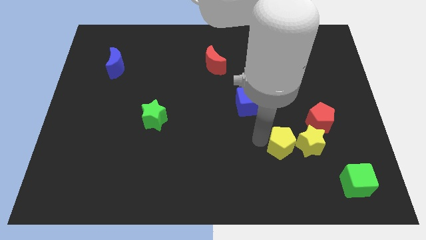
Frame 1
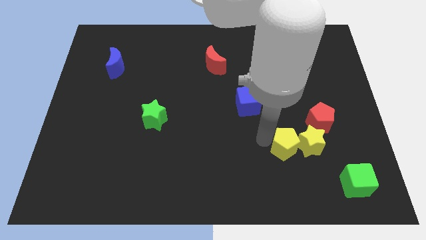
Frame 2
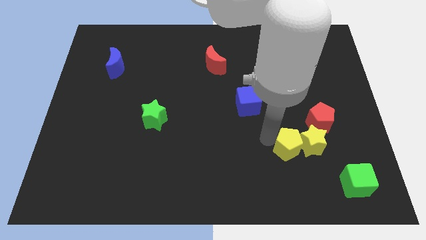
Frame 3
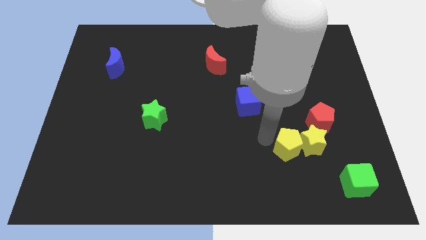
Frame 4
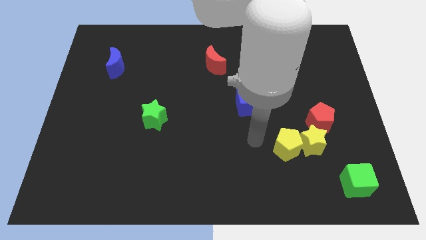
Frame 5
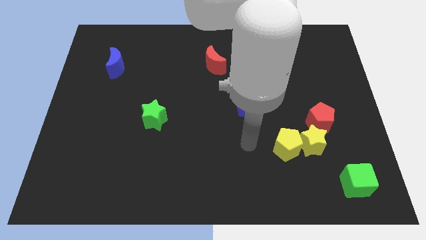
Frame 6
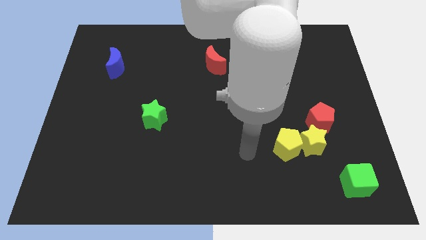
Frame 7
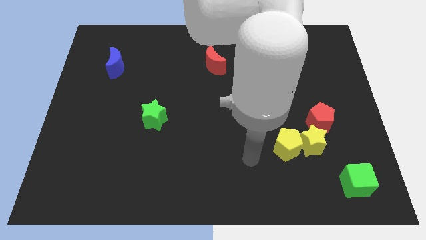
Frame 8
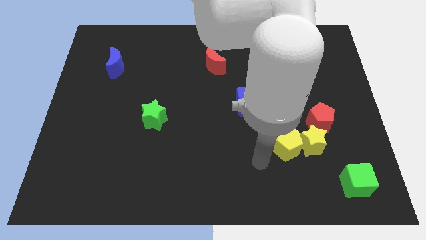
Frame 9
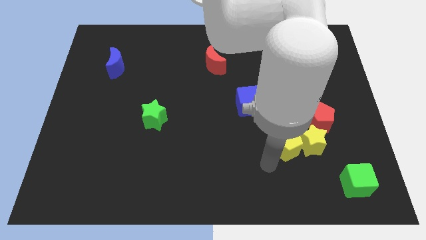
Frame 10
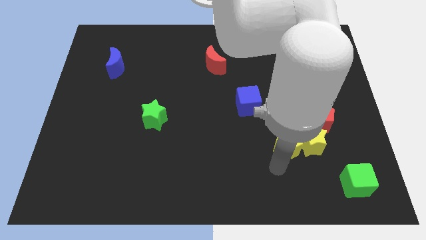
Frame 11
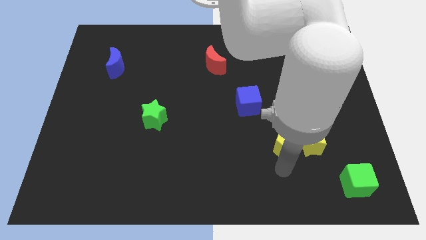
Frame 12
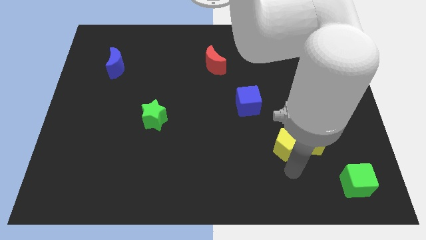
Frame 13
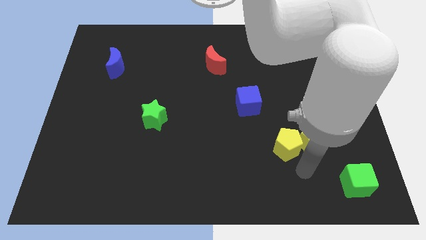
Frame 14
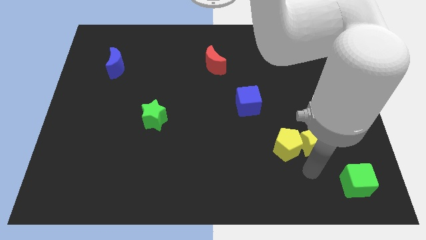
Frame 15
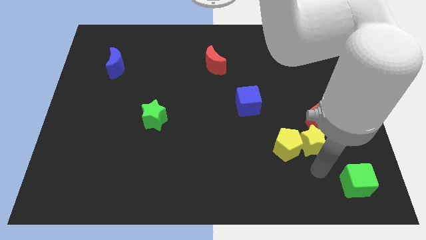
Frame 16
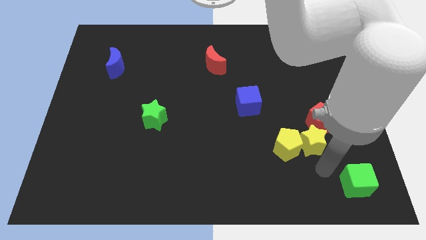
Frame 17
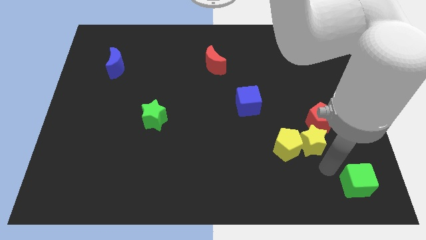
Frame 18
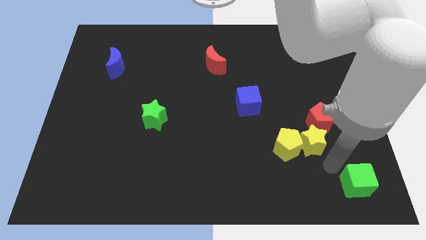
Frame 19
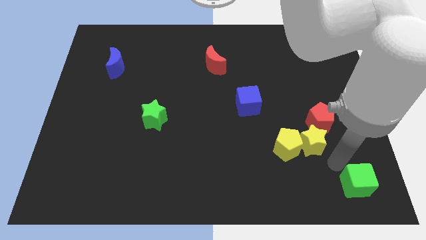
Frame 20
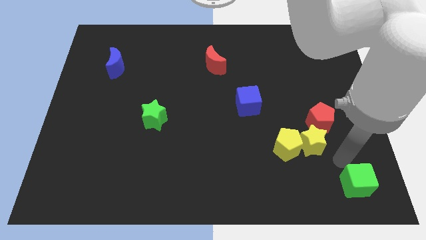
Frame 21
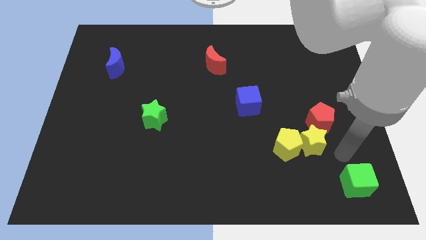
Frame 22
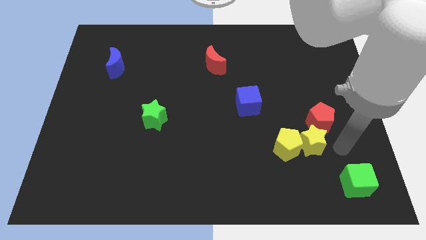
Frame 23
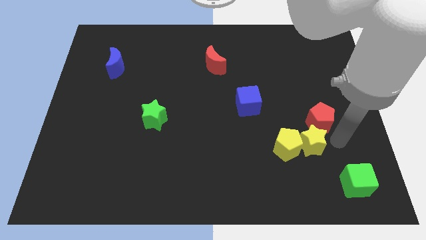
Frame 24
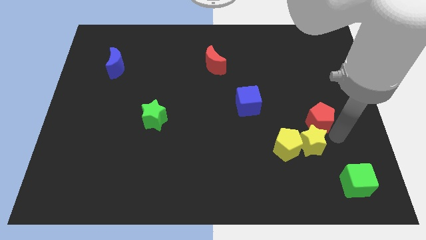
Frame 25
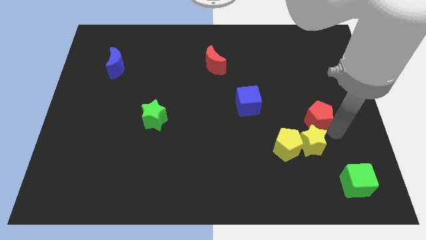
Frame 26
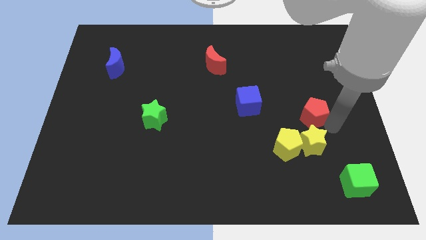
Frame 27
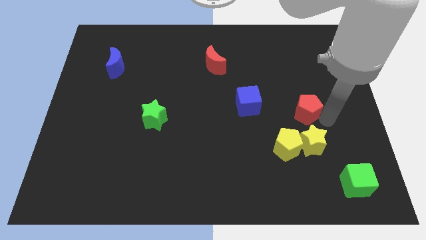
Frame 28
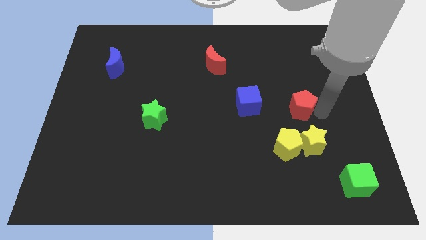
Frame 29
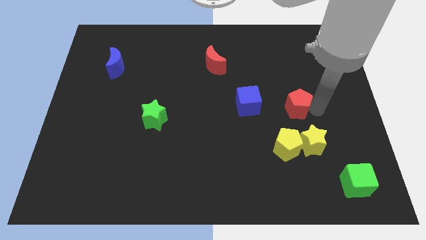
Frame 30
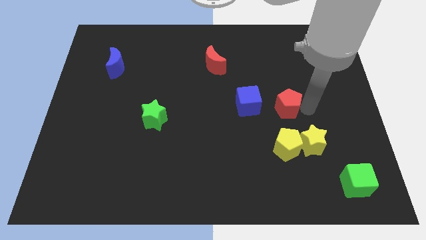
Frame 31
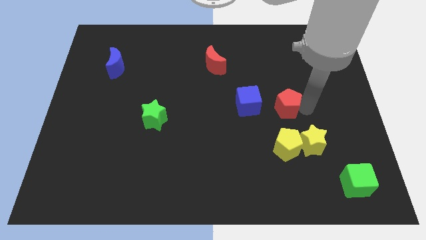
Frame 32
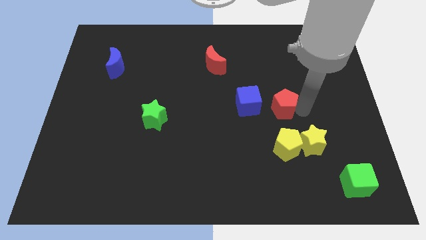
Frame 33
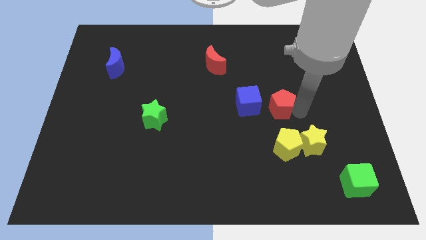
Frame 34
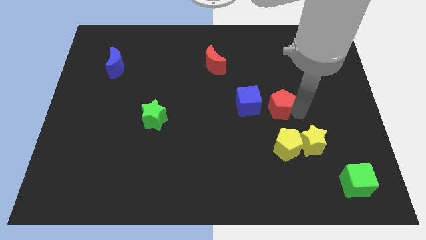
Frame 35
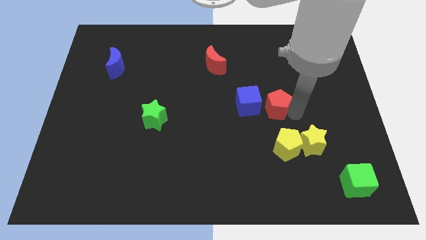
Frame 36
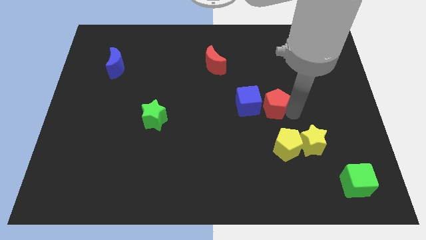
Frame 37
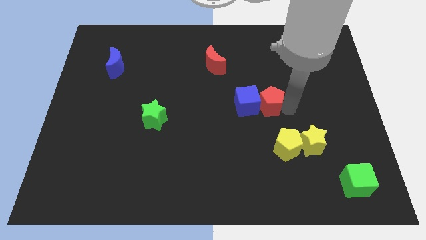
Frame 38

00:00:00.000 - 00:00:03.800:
place the red pentagon above the yellow pentagon

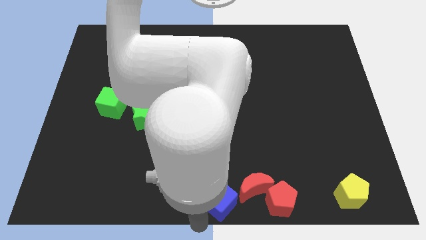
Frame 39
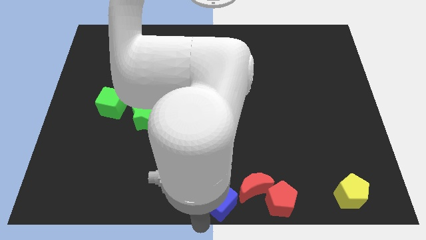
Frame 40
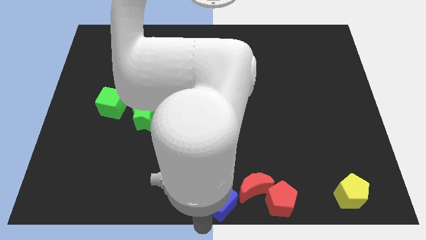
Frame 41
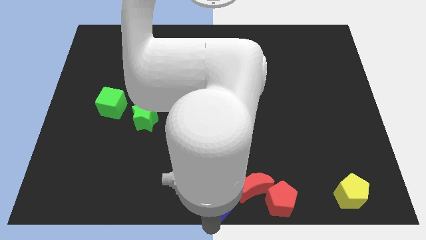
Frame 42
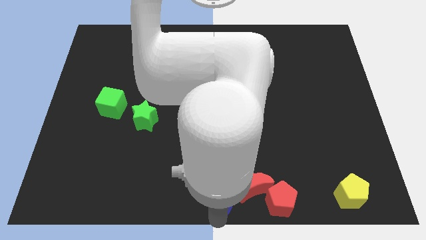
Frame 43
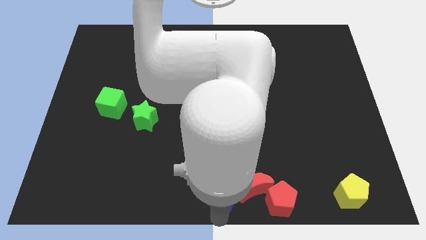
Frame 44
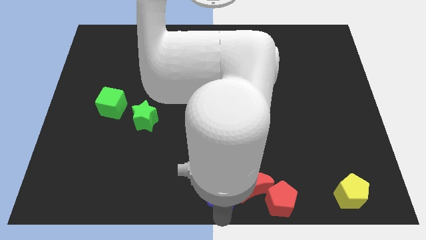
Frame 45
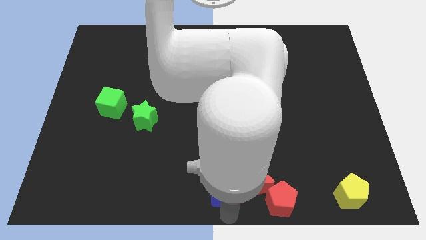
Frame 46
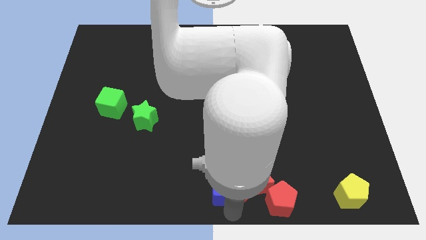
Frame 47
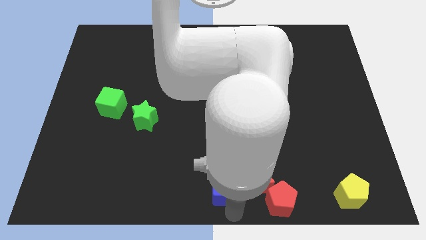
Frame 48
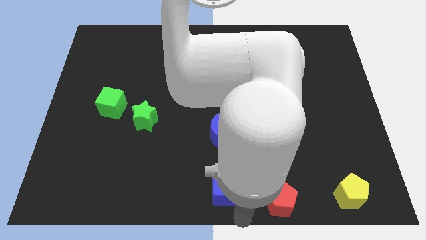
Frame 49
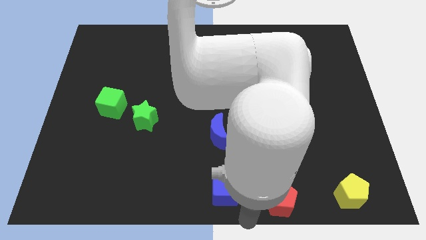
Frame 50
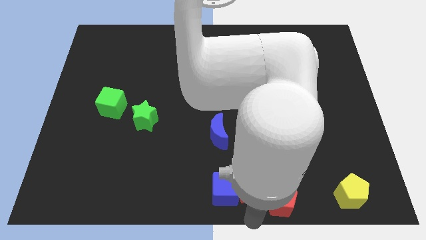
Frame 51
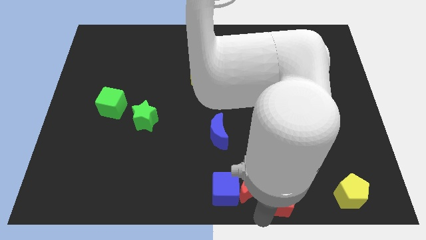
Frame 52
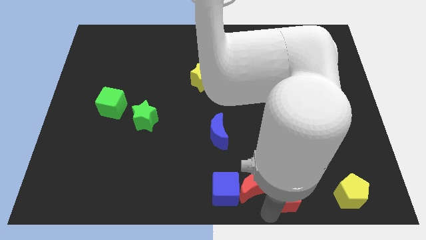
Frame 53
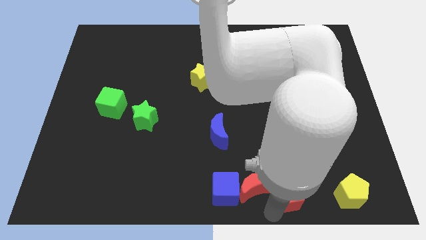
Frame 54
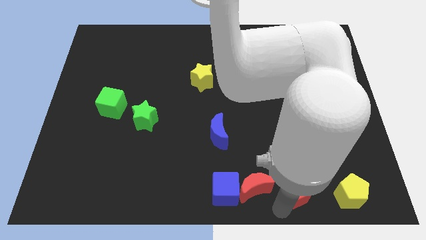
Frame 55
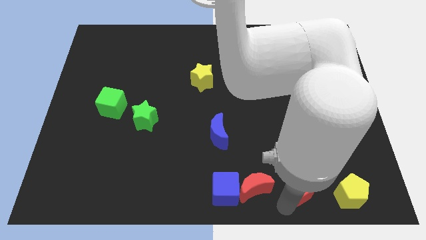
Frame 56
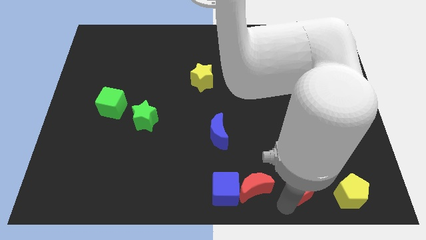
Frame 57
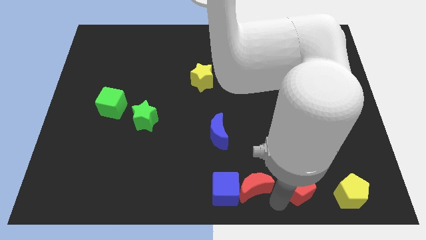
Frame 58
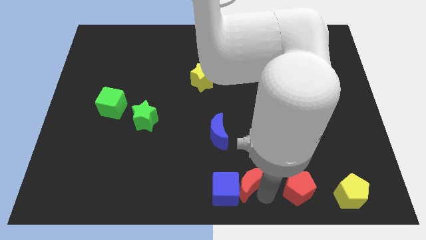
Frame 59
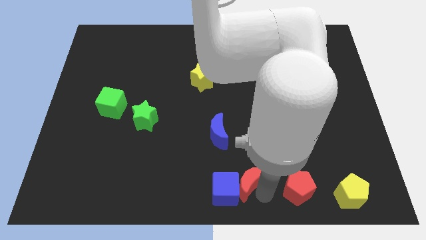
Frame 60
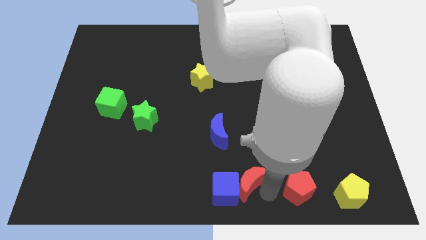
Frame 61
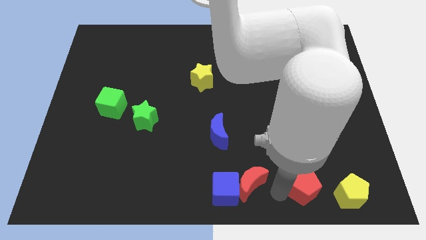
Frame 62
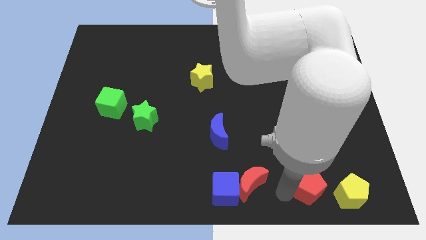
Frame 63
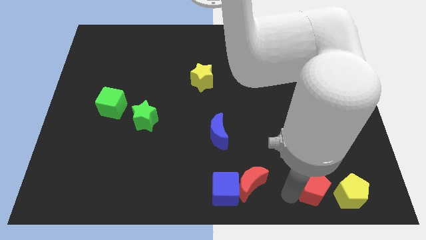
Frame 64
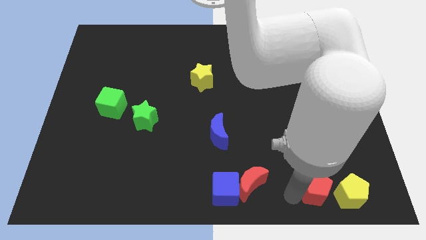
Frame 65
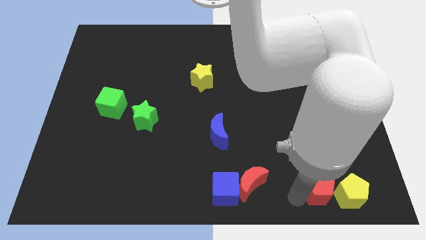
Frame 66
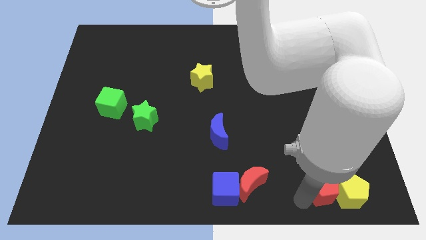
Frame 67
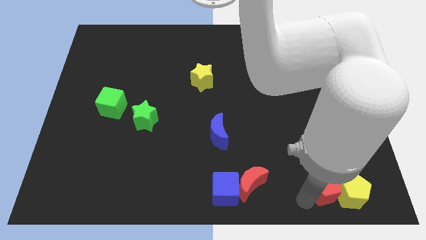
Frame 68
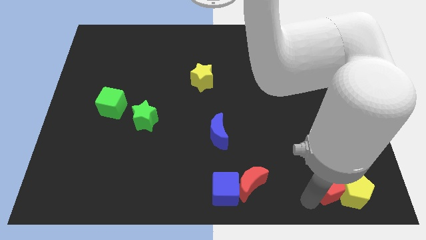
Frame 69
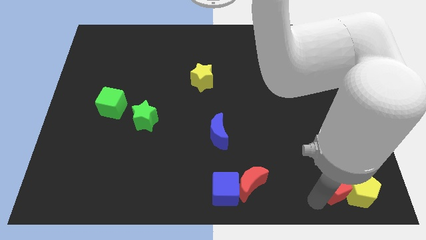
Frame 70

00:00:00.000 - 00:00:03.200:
move the red pentagon into the yellow pentagon

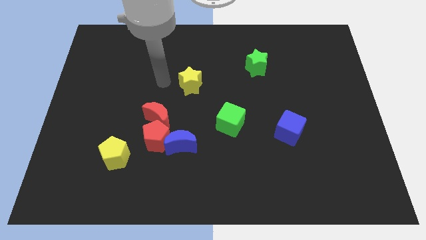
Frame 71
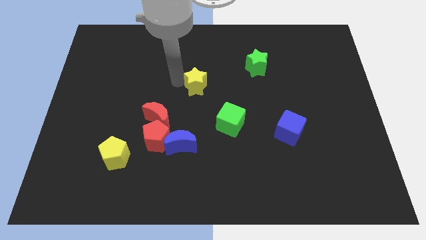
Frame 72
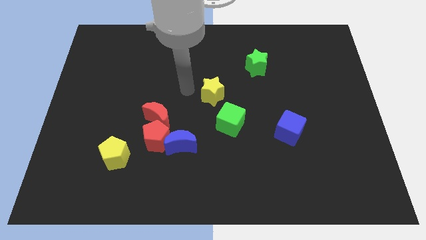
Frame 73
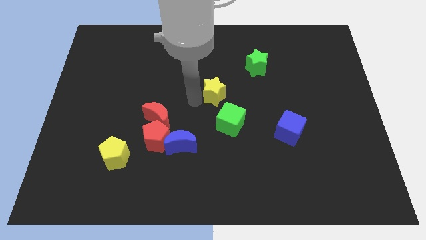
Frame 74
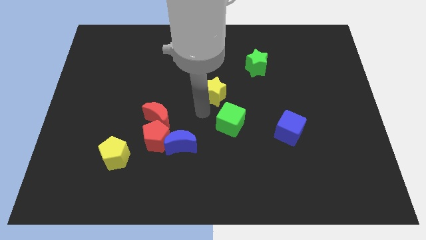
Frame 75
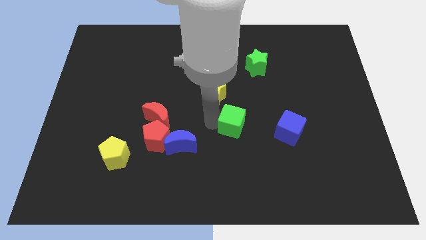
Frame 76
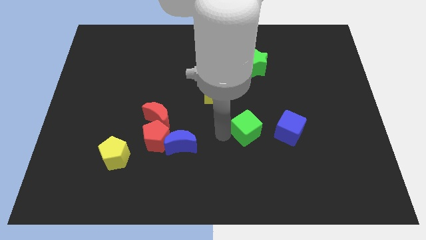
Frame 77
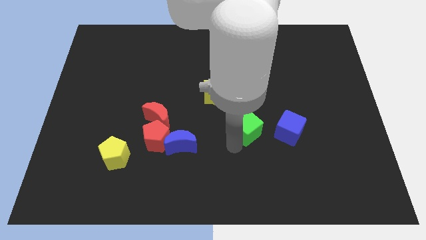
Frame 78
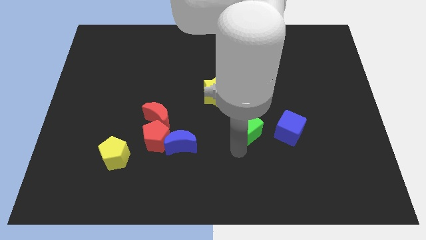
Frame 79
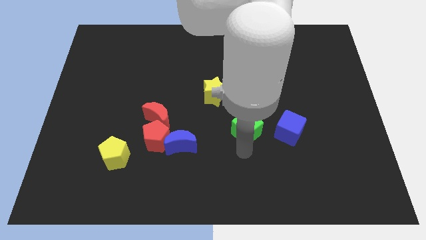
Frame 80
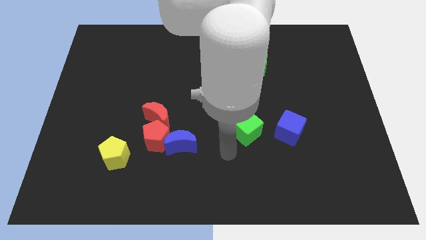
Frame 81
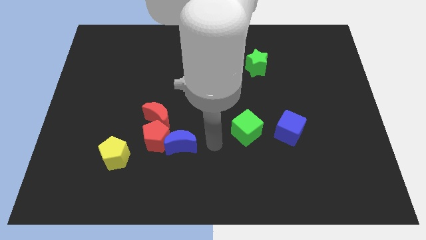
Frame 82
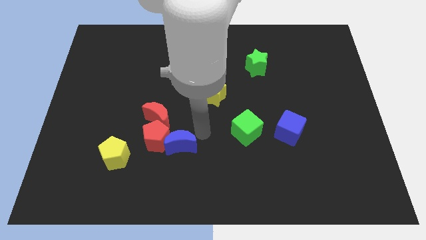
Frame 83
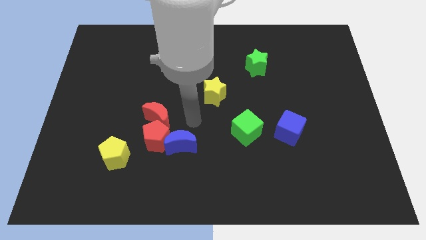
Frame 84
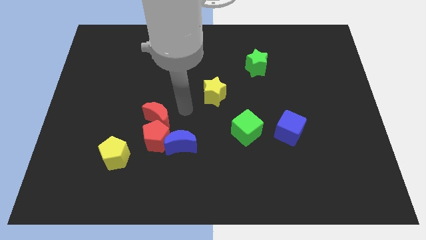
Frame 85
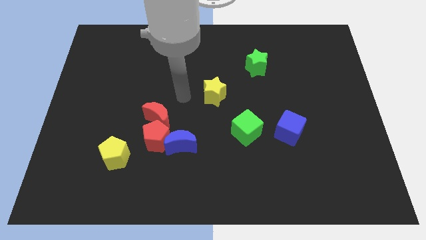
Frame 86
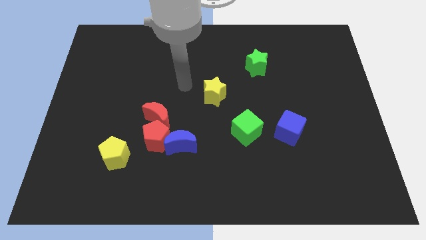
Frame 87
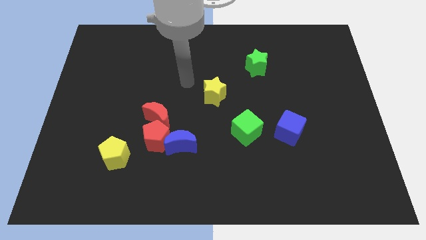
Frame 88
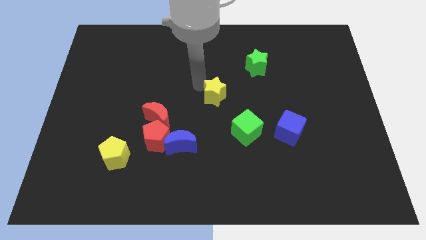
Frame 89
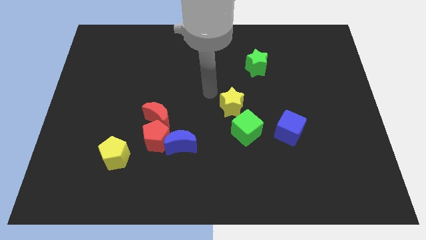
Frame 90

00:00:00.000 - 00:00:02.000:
push the yellow star into the green cube
